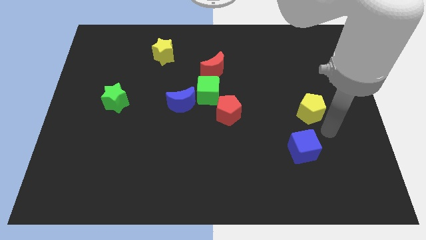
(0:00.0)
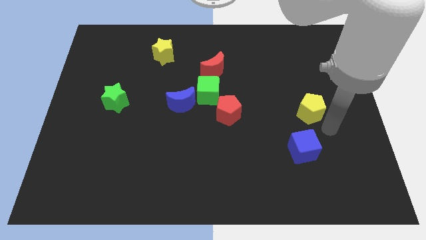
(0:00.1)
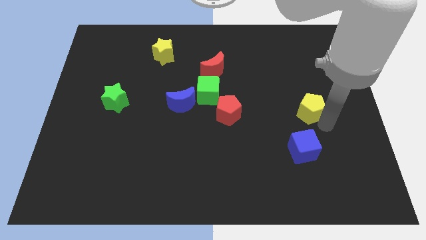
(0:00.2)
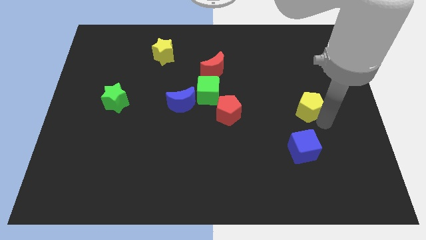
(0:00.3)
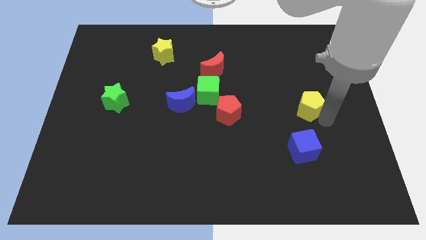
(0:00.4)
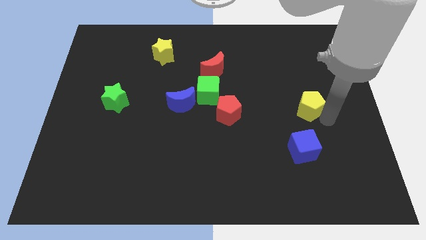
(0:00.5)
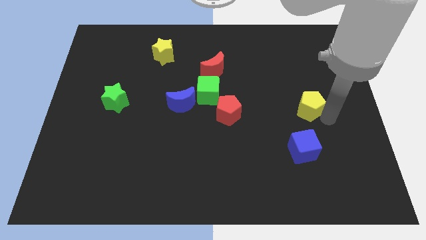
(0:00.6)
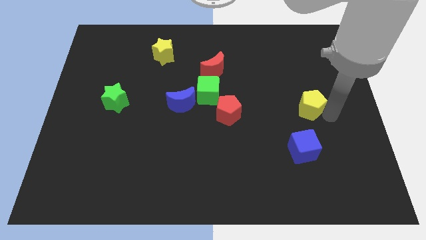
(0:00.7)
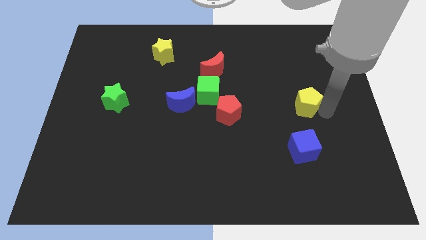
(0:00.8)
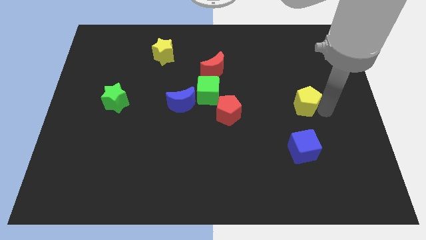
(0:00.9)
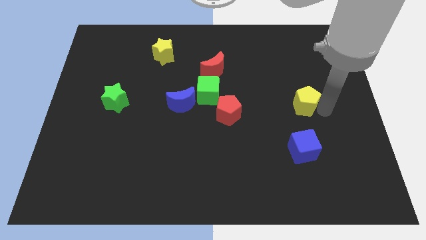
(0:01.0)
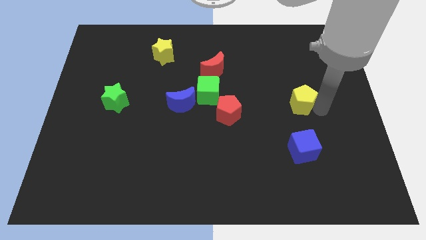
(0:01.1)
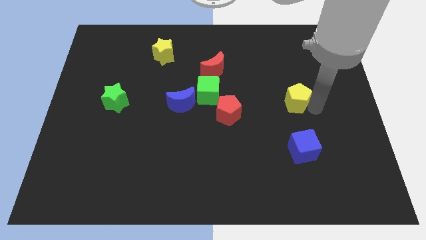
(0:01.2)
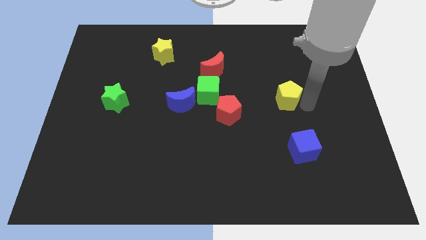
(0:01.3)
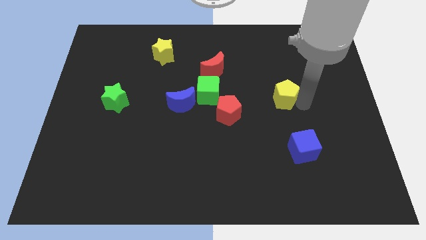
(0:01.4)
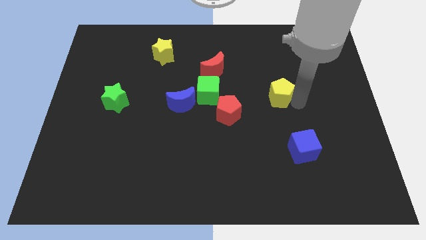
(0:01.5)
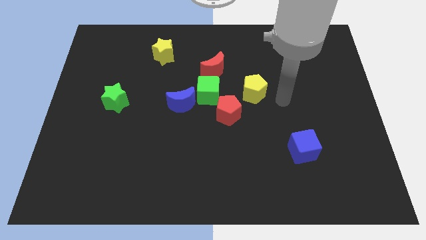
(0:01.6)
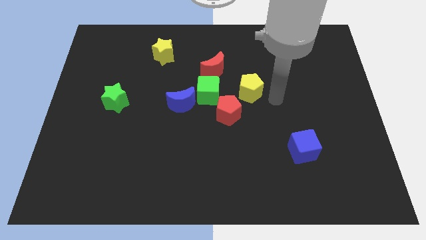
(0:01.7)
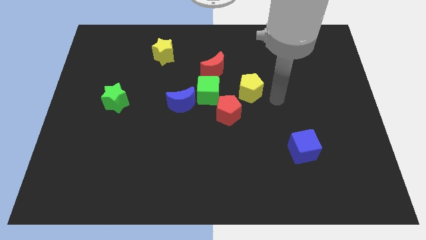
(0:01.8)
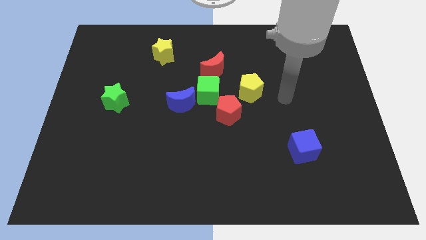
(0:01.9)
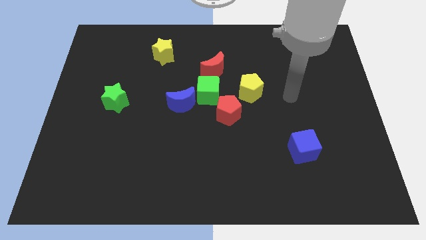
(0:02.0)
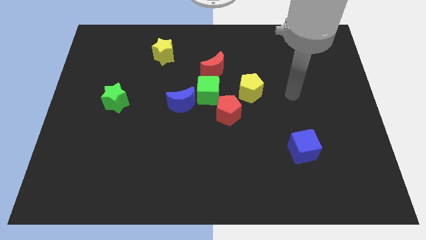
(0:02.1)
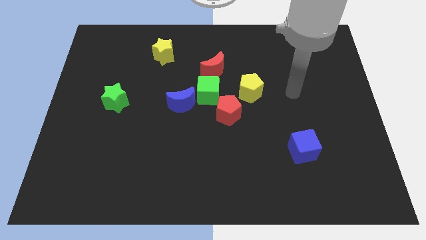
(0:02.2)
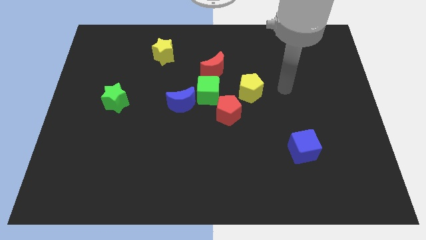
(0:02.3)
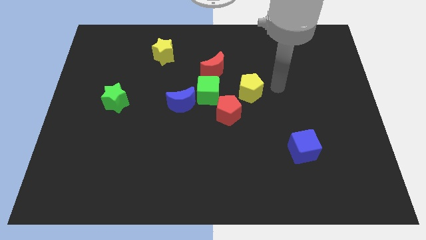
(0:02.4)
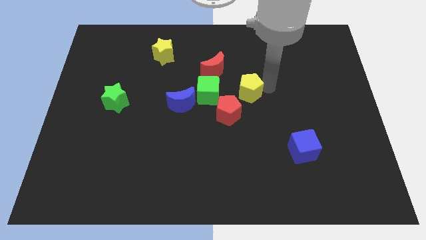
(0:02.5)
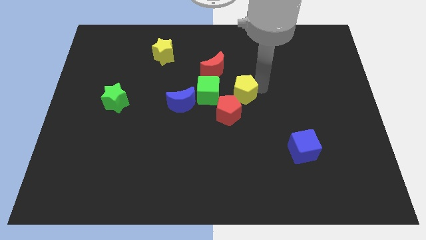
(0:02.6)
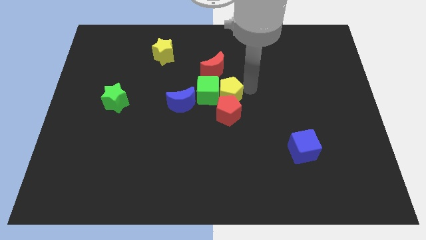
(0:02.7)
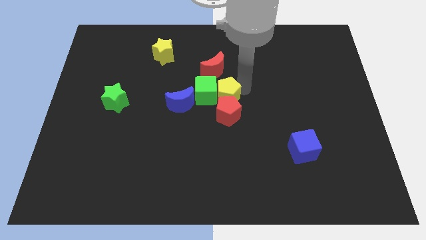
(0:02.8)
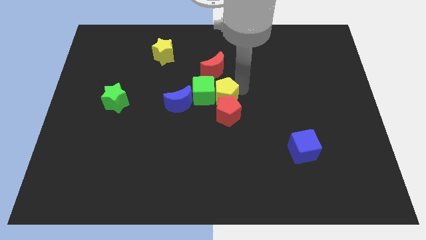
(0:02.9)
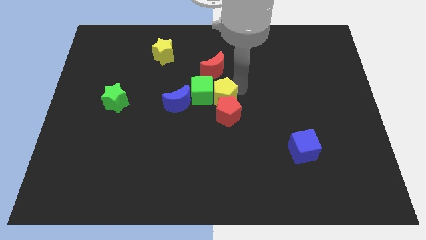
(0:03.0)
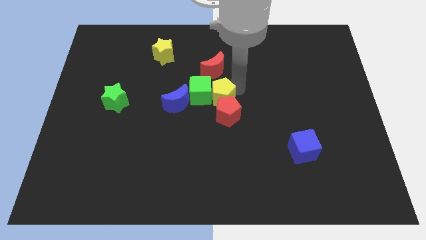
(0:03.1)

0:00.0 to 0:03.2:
place the yellow pentagon on the top of the red pentagon

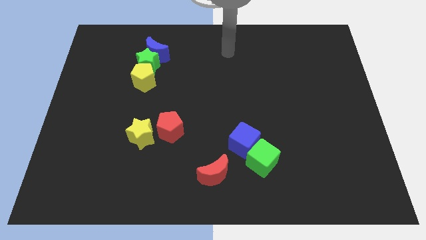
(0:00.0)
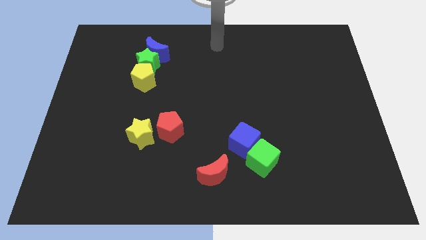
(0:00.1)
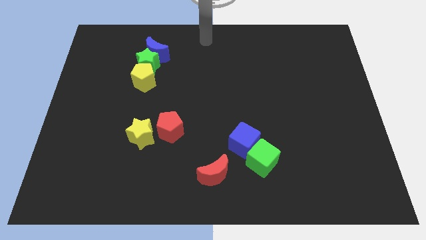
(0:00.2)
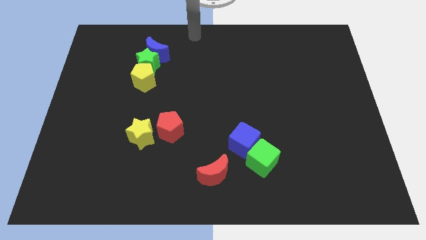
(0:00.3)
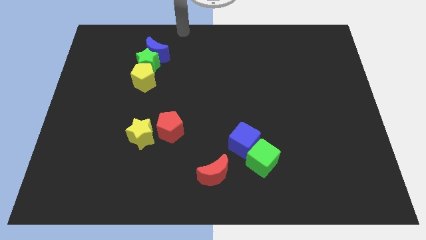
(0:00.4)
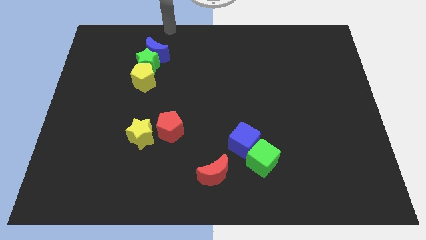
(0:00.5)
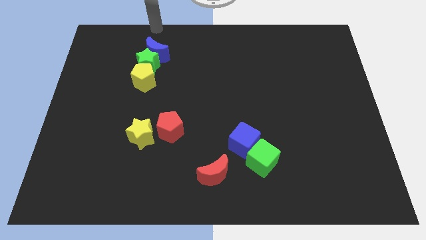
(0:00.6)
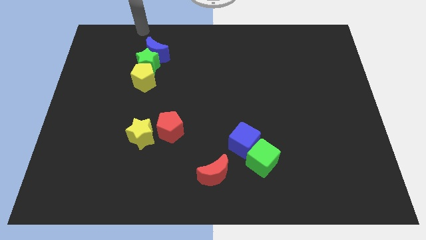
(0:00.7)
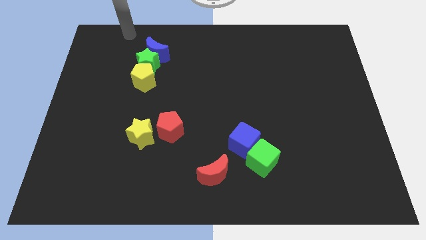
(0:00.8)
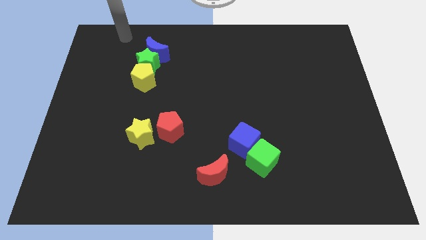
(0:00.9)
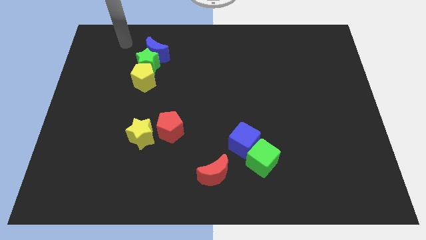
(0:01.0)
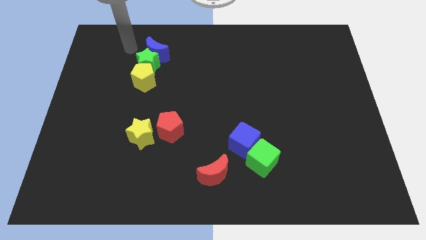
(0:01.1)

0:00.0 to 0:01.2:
move your arm to the left side of the blue crescent

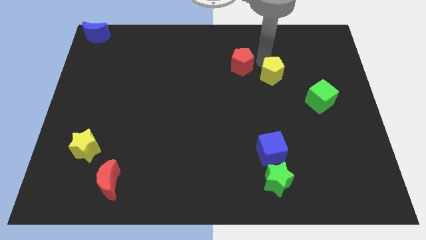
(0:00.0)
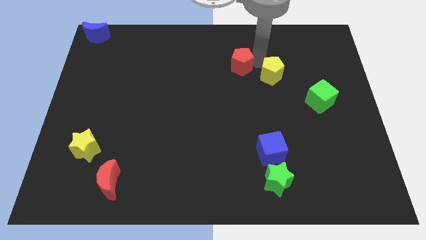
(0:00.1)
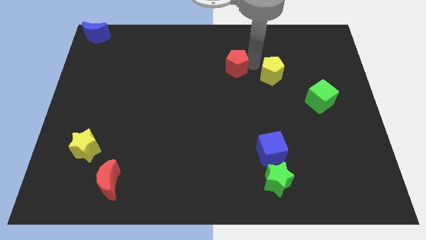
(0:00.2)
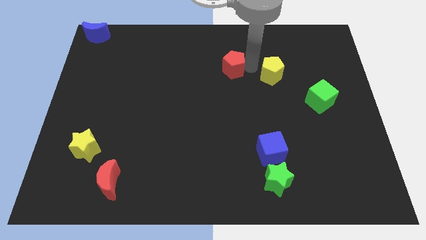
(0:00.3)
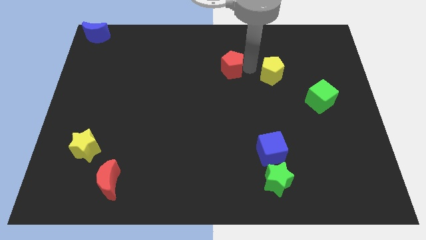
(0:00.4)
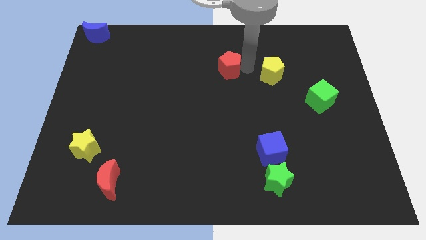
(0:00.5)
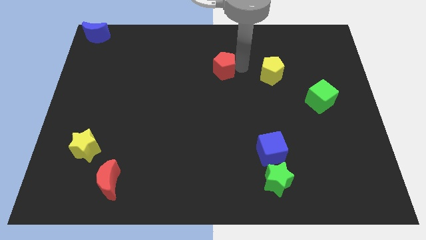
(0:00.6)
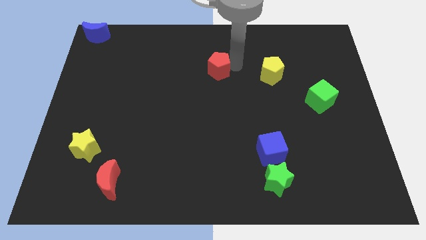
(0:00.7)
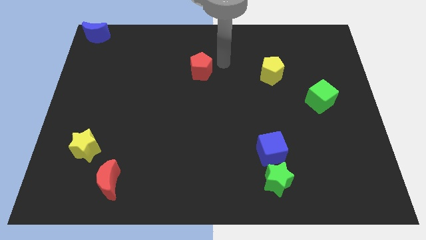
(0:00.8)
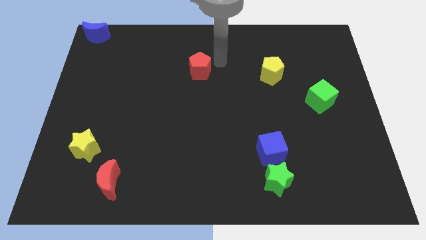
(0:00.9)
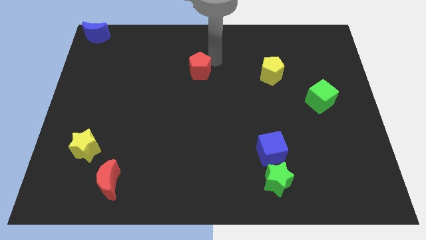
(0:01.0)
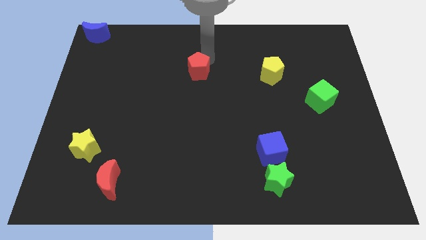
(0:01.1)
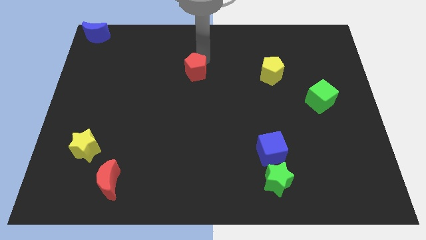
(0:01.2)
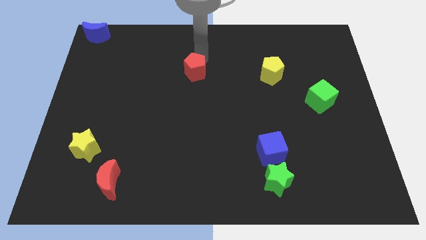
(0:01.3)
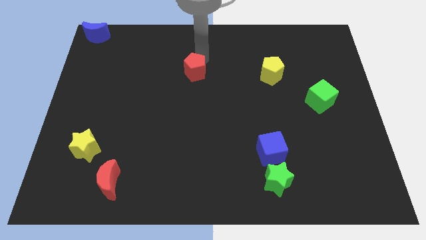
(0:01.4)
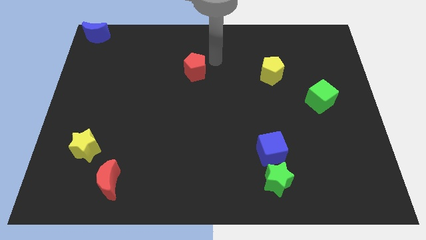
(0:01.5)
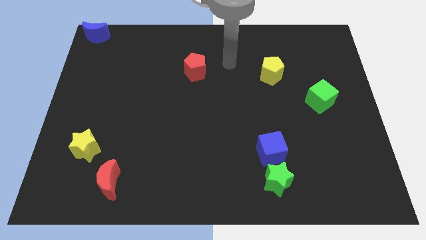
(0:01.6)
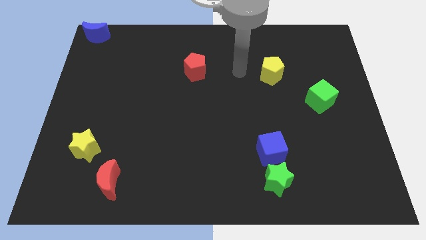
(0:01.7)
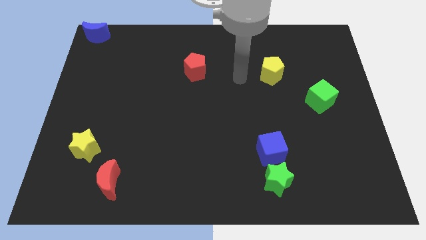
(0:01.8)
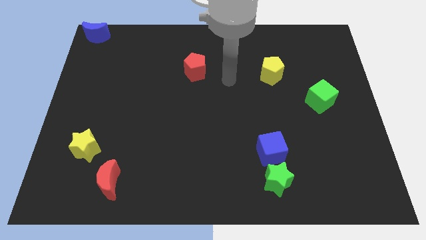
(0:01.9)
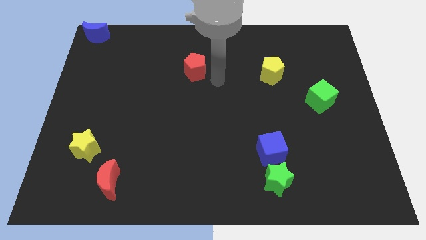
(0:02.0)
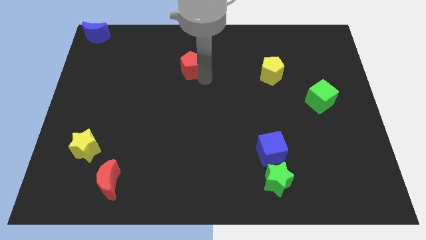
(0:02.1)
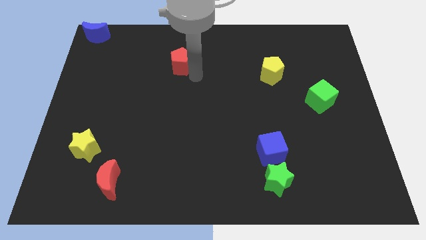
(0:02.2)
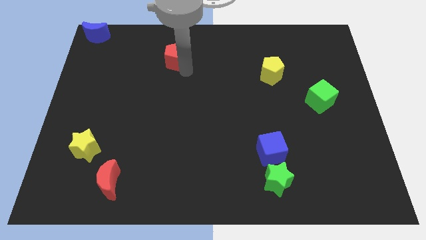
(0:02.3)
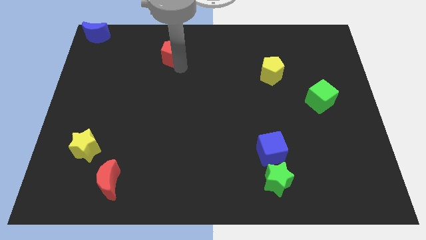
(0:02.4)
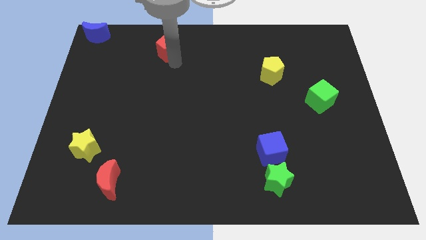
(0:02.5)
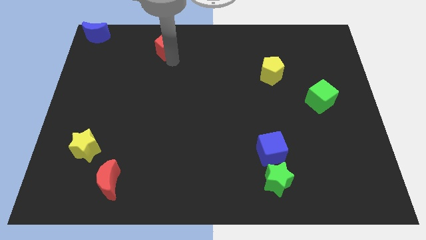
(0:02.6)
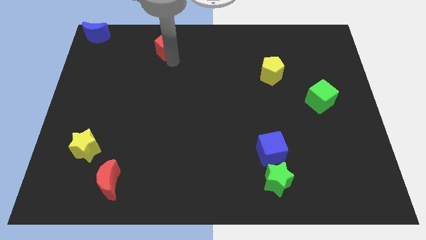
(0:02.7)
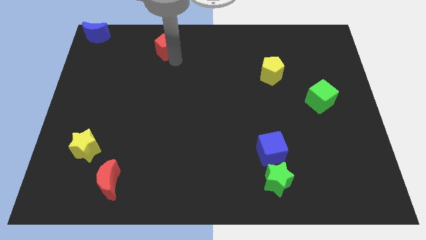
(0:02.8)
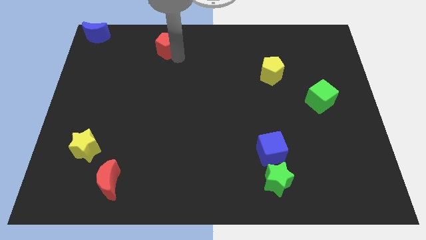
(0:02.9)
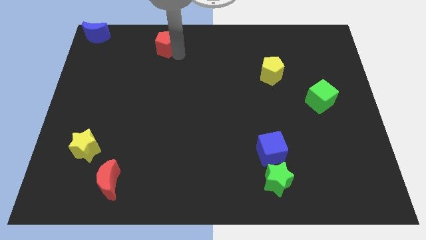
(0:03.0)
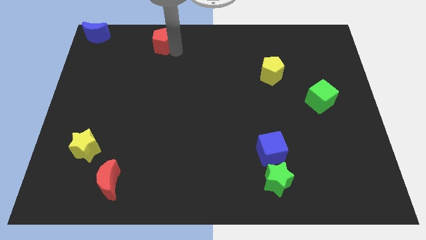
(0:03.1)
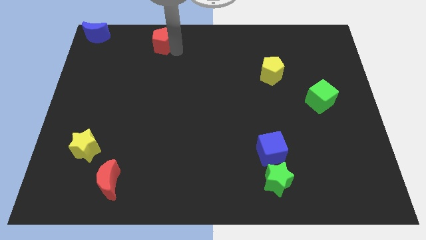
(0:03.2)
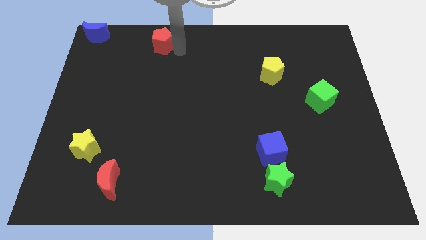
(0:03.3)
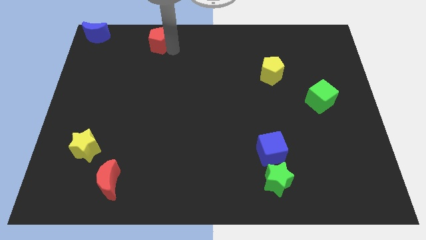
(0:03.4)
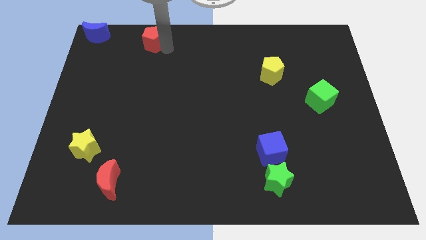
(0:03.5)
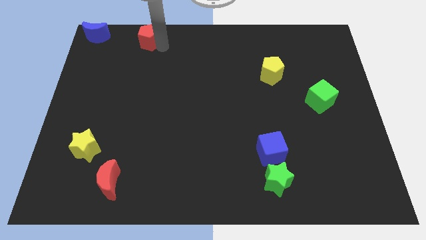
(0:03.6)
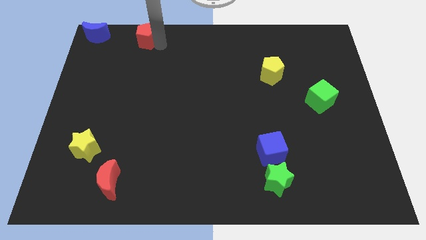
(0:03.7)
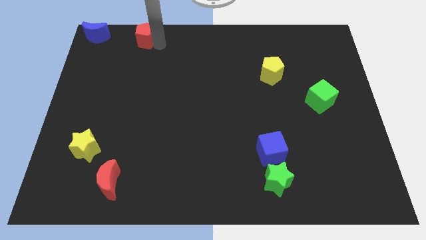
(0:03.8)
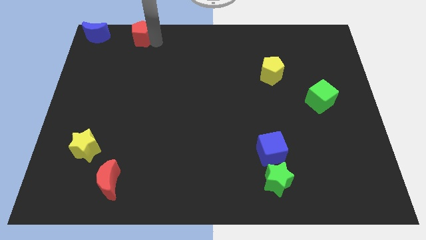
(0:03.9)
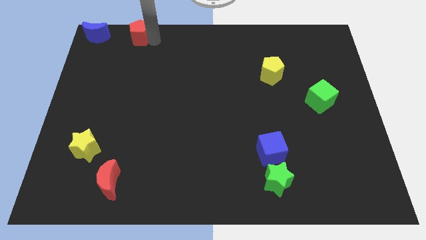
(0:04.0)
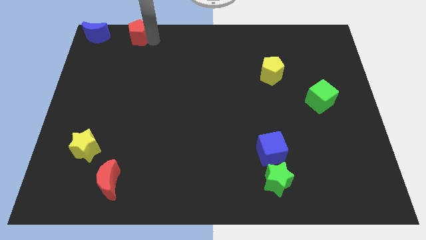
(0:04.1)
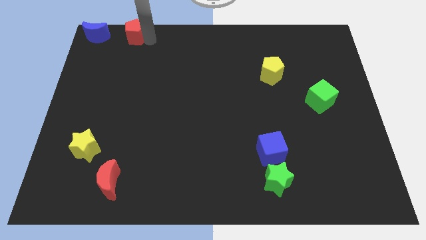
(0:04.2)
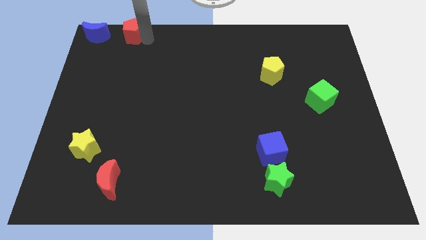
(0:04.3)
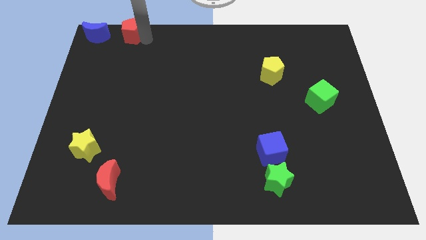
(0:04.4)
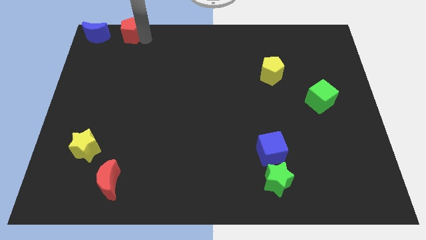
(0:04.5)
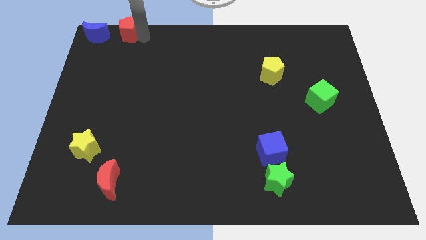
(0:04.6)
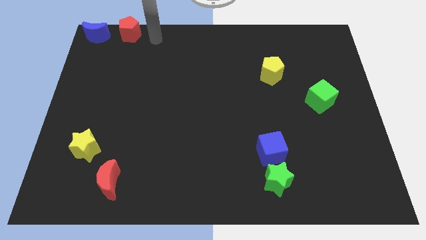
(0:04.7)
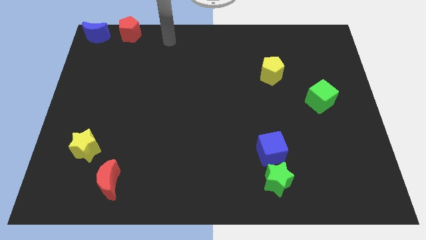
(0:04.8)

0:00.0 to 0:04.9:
move the red pentagon to the right side of the blue moon
